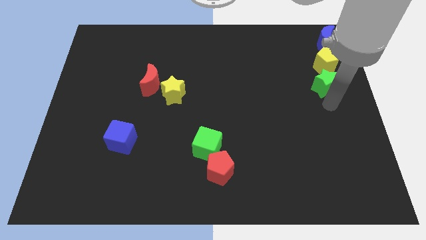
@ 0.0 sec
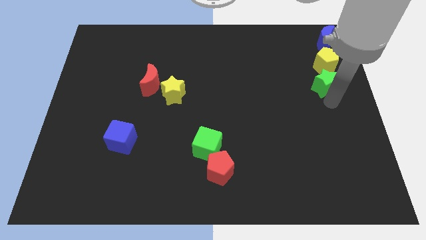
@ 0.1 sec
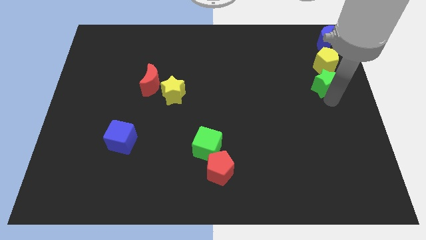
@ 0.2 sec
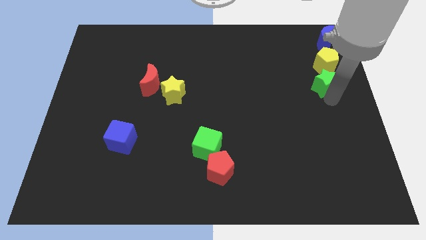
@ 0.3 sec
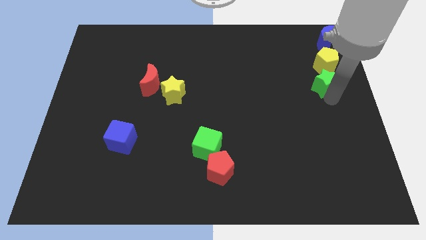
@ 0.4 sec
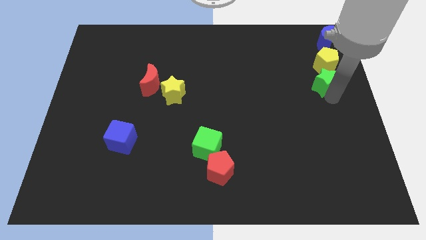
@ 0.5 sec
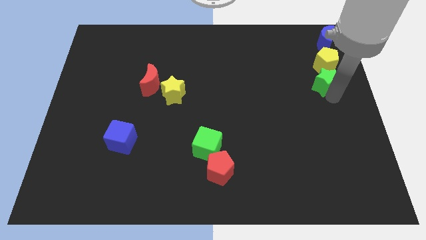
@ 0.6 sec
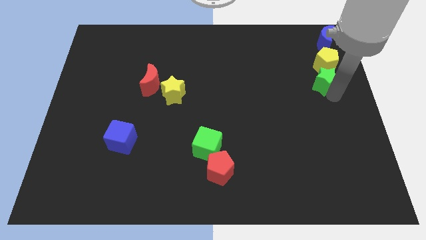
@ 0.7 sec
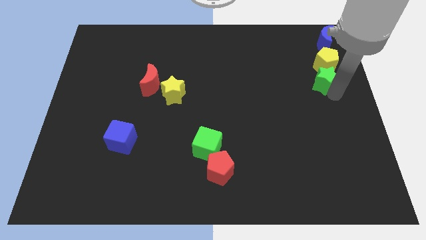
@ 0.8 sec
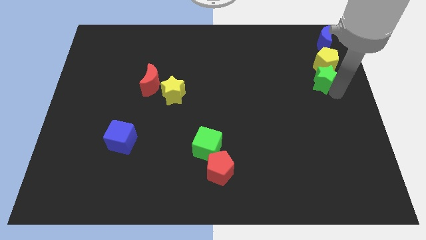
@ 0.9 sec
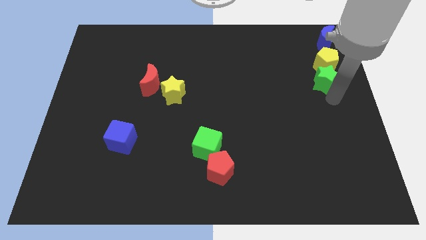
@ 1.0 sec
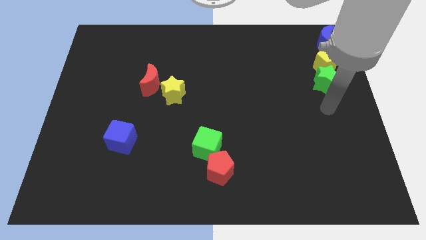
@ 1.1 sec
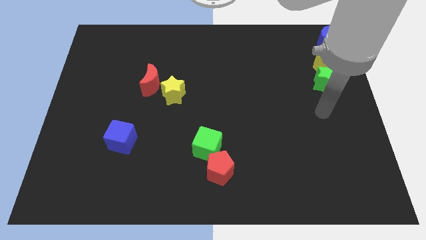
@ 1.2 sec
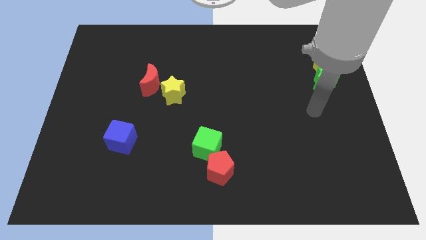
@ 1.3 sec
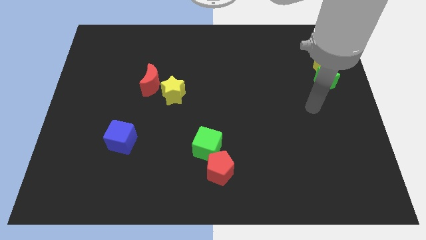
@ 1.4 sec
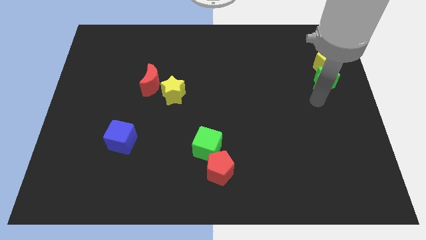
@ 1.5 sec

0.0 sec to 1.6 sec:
push the green star into the yellow pentagon

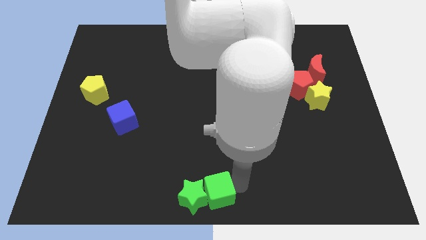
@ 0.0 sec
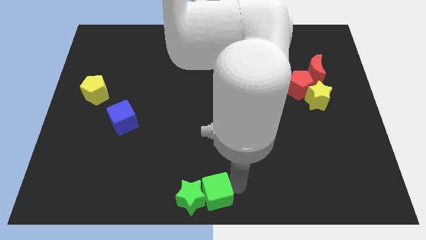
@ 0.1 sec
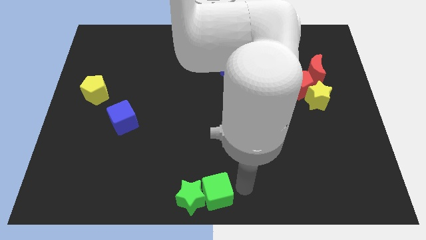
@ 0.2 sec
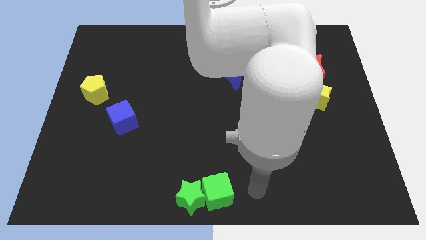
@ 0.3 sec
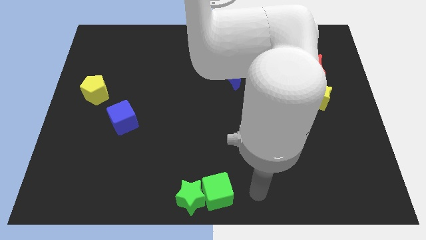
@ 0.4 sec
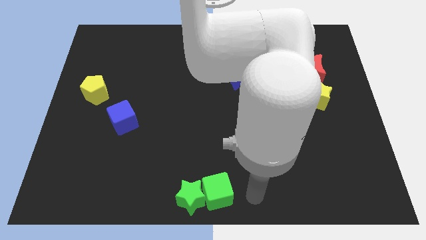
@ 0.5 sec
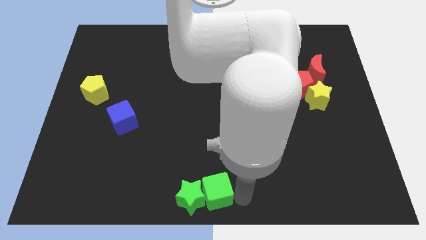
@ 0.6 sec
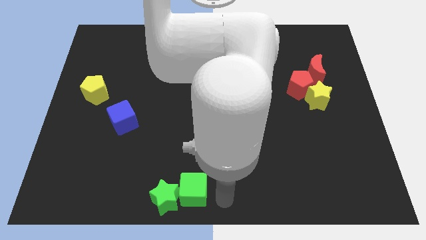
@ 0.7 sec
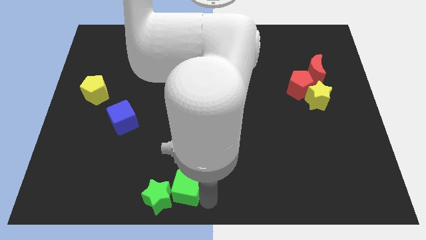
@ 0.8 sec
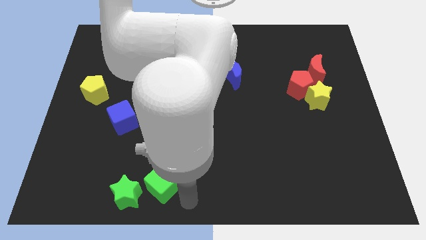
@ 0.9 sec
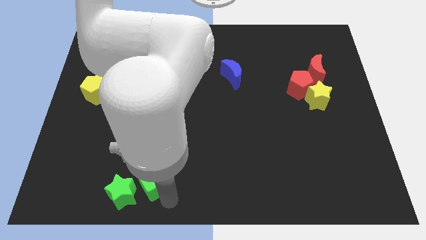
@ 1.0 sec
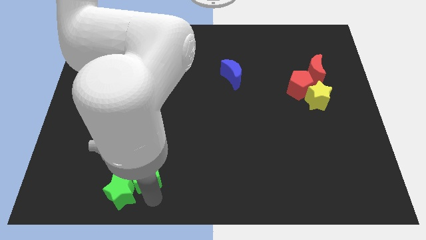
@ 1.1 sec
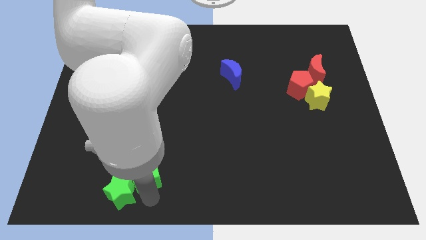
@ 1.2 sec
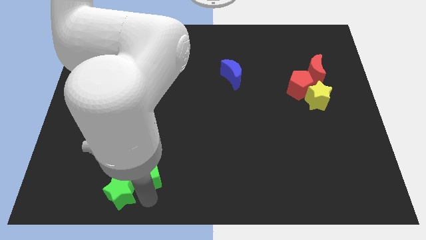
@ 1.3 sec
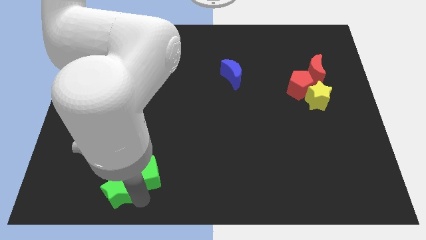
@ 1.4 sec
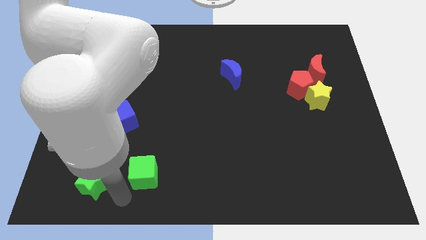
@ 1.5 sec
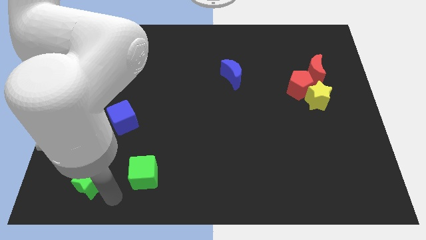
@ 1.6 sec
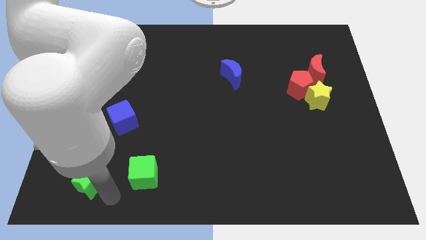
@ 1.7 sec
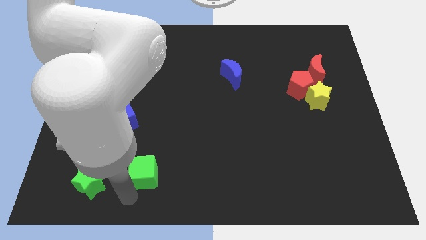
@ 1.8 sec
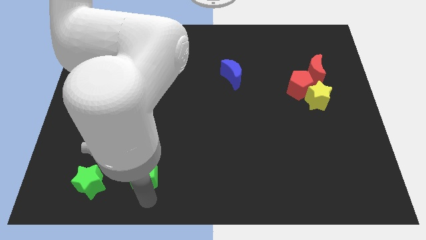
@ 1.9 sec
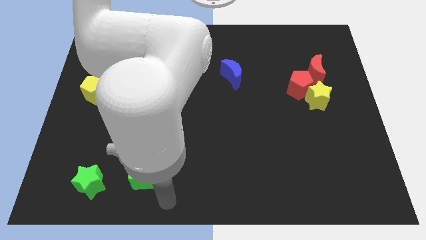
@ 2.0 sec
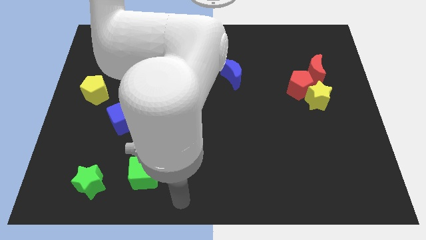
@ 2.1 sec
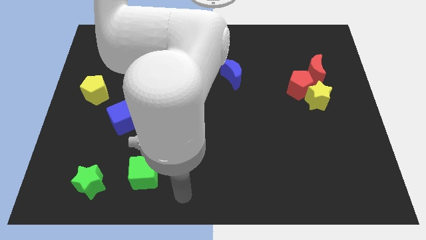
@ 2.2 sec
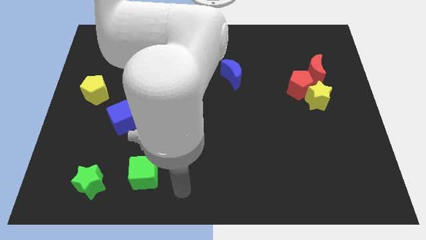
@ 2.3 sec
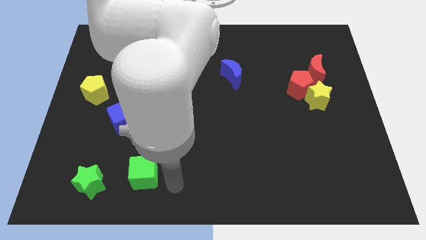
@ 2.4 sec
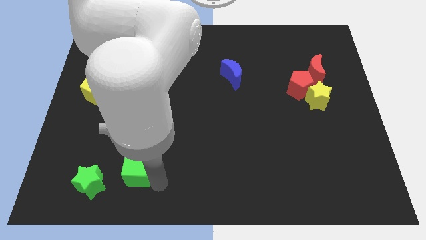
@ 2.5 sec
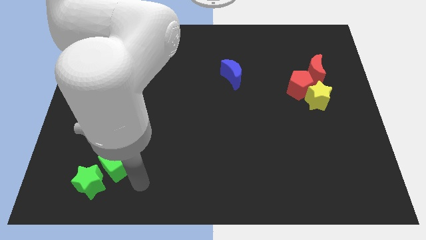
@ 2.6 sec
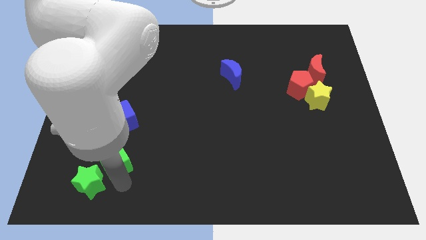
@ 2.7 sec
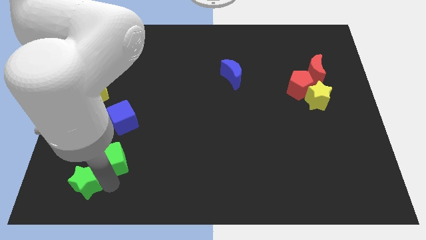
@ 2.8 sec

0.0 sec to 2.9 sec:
push green blocks slightly to the left

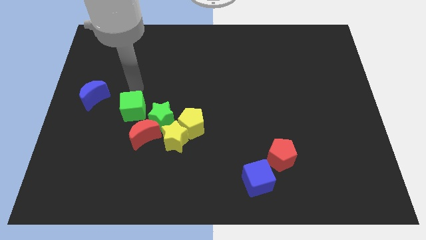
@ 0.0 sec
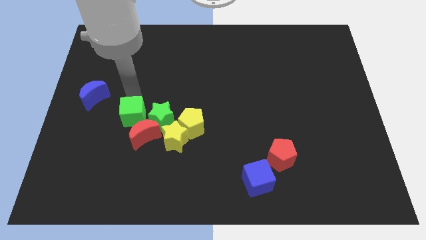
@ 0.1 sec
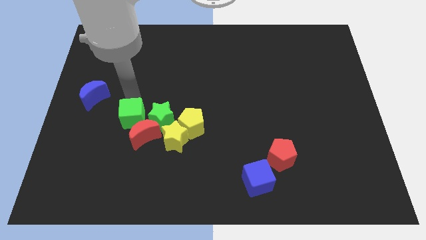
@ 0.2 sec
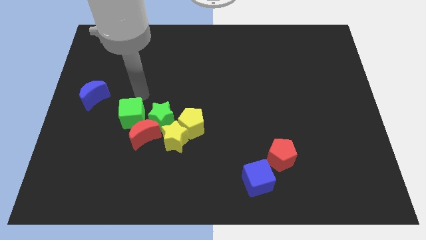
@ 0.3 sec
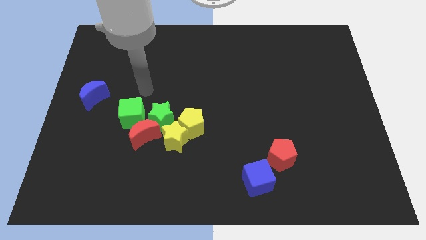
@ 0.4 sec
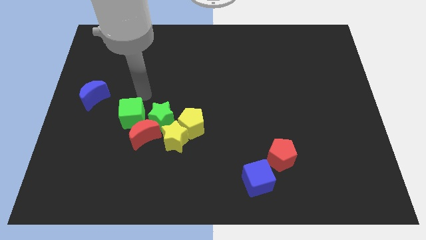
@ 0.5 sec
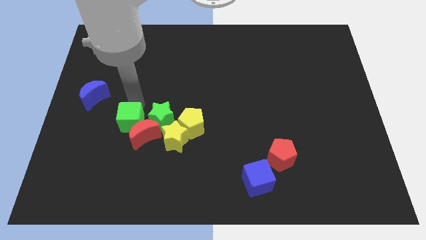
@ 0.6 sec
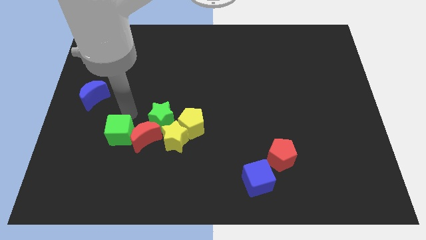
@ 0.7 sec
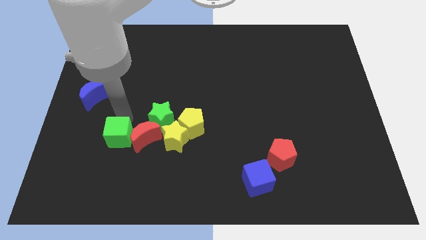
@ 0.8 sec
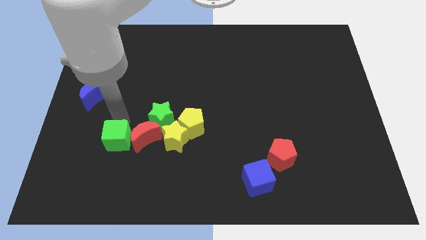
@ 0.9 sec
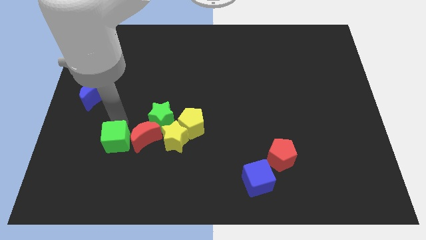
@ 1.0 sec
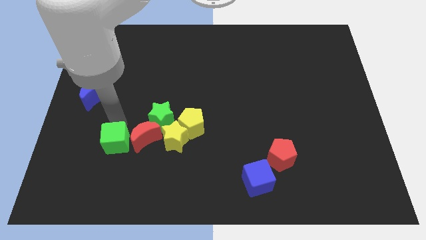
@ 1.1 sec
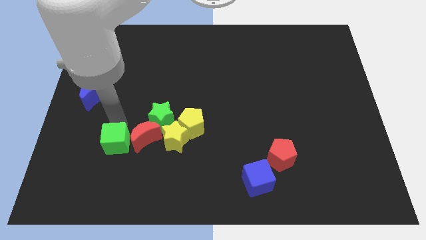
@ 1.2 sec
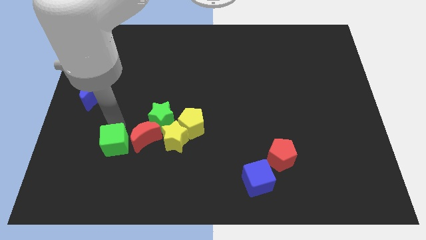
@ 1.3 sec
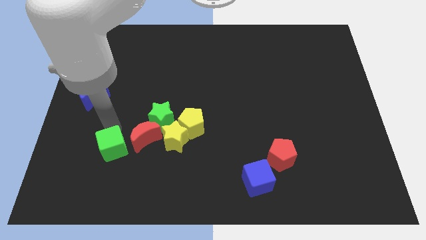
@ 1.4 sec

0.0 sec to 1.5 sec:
place the green cube vertical parallel to the red crescent

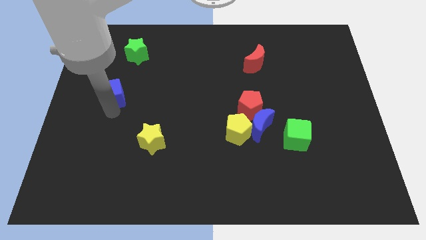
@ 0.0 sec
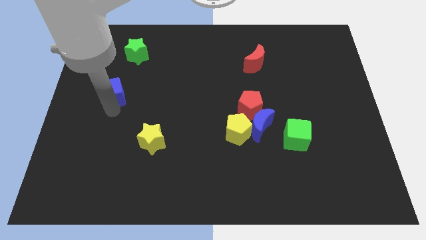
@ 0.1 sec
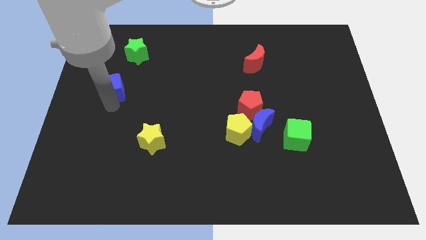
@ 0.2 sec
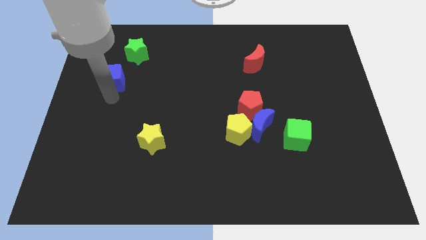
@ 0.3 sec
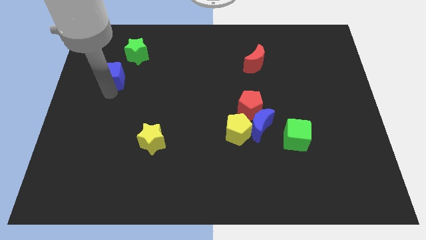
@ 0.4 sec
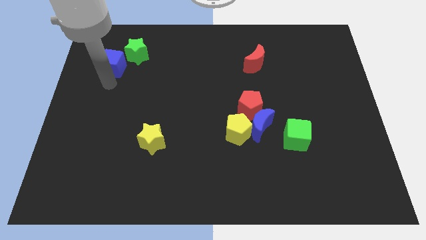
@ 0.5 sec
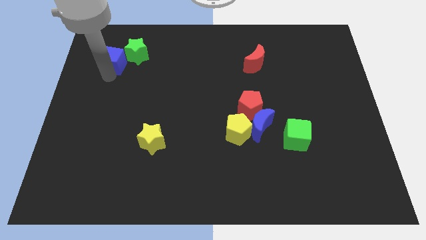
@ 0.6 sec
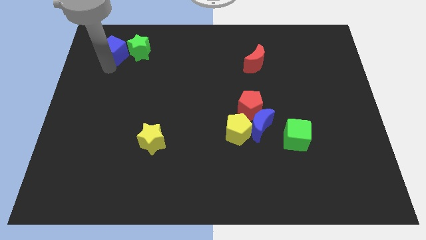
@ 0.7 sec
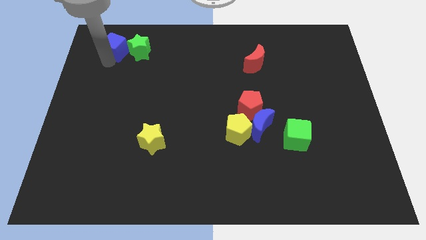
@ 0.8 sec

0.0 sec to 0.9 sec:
make the blue cube to touch the left side of the green star

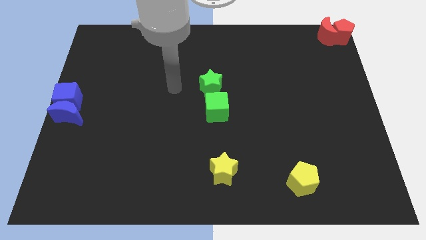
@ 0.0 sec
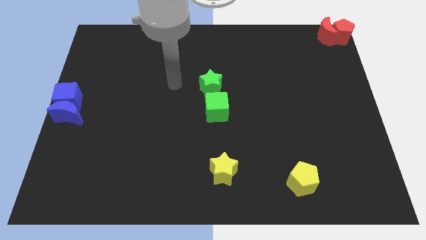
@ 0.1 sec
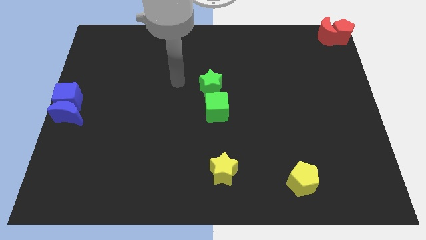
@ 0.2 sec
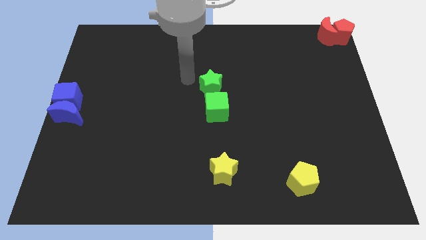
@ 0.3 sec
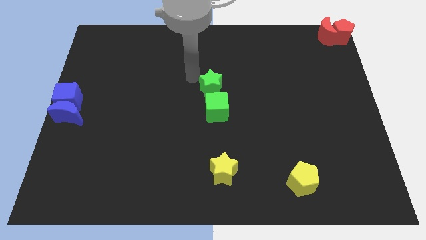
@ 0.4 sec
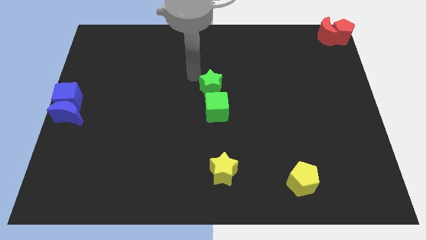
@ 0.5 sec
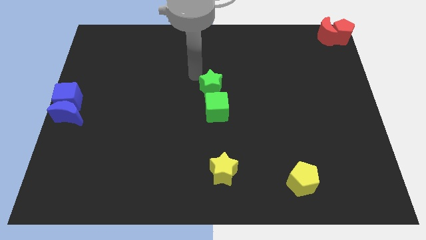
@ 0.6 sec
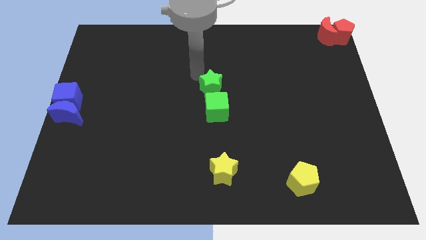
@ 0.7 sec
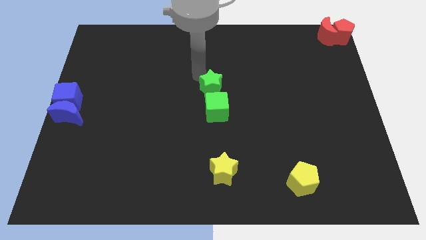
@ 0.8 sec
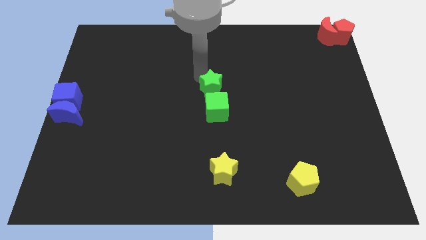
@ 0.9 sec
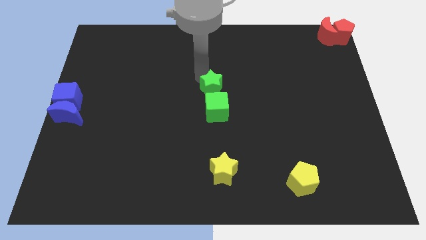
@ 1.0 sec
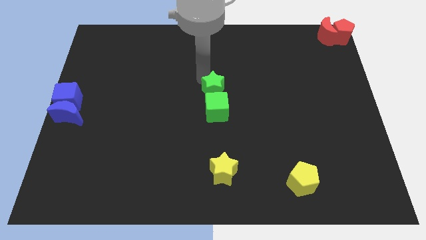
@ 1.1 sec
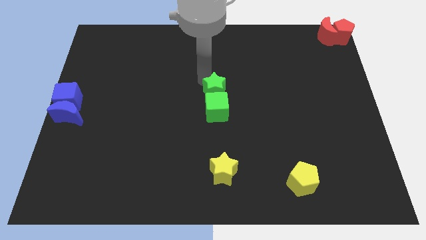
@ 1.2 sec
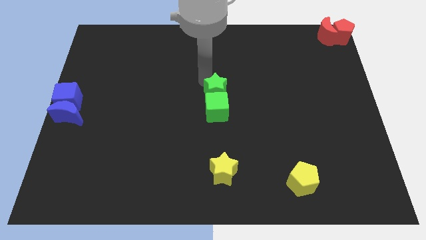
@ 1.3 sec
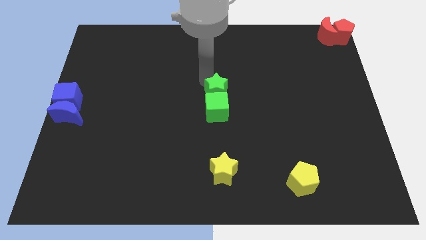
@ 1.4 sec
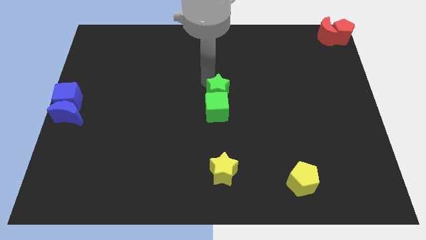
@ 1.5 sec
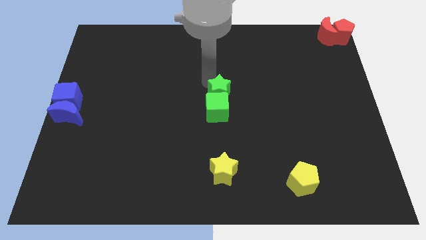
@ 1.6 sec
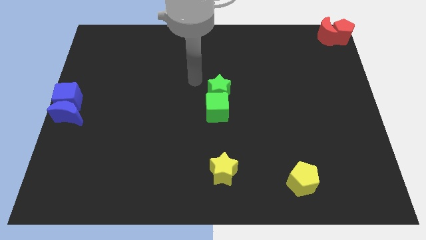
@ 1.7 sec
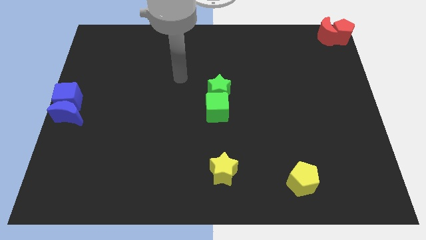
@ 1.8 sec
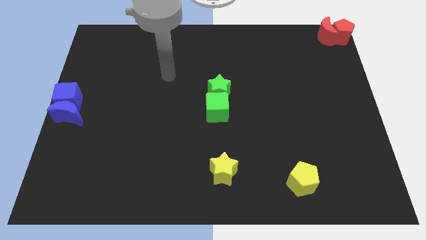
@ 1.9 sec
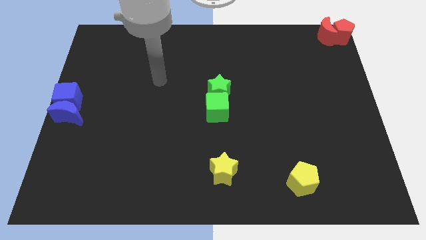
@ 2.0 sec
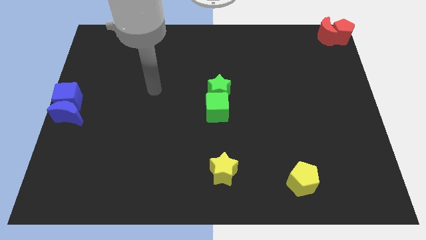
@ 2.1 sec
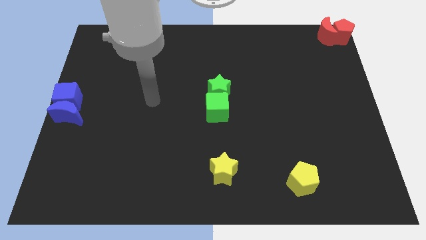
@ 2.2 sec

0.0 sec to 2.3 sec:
push the green star into the green cube
